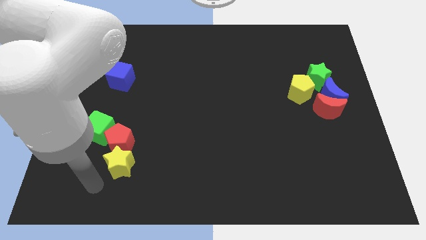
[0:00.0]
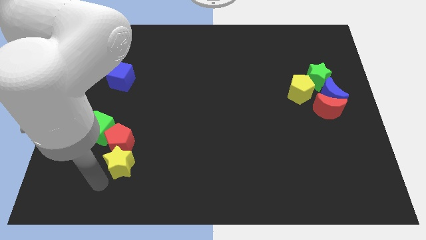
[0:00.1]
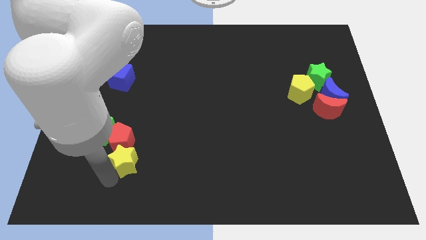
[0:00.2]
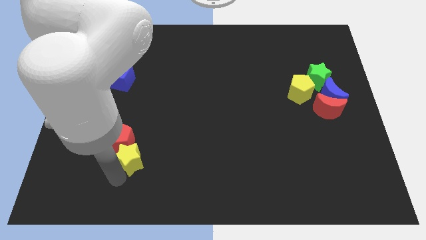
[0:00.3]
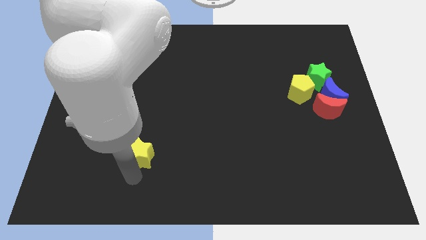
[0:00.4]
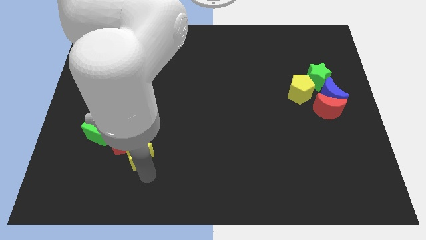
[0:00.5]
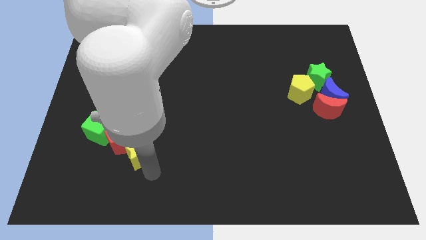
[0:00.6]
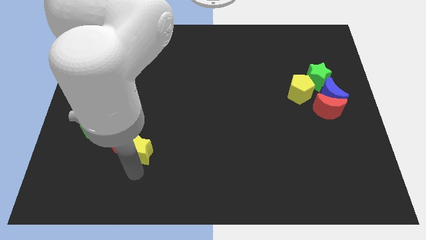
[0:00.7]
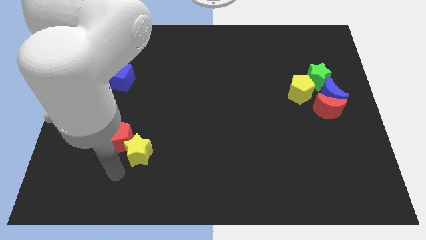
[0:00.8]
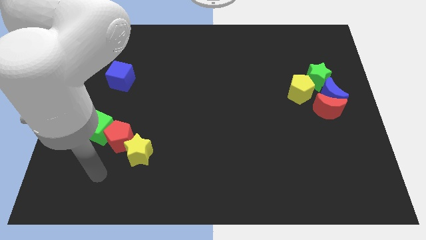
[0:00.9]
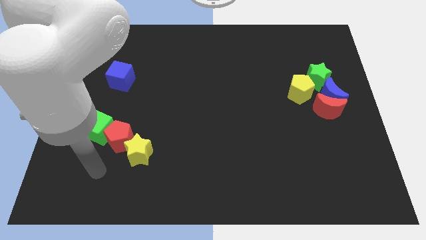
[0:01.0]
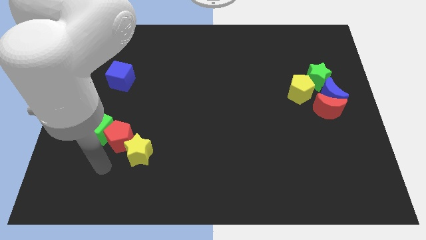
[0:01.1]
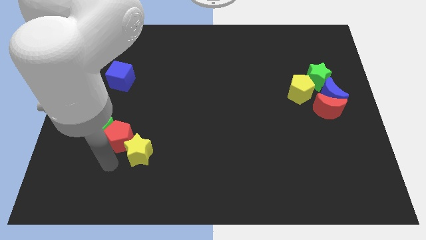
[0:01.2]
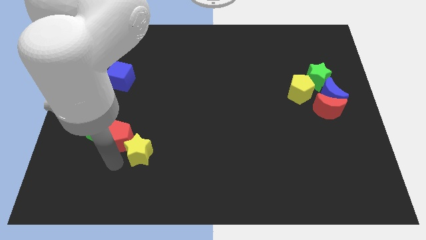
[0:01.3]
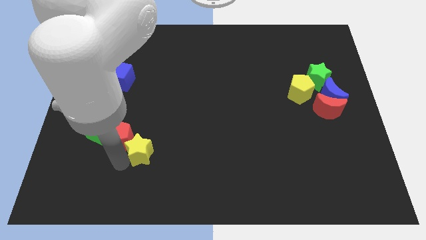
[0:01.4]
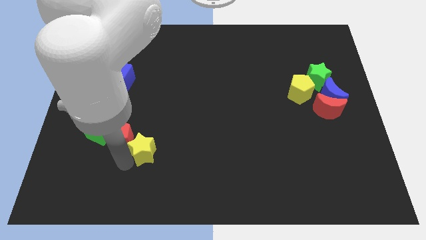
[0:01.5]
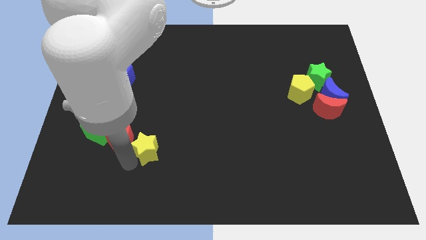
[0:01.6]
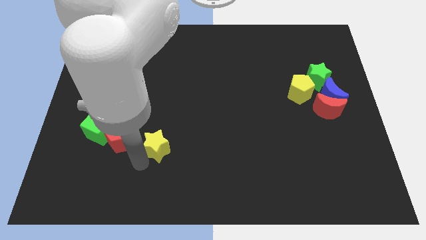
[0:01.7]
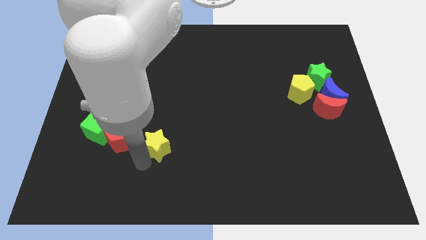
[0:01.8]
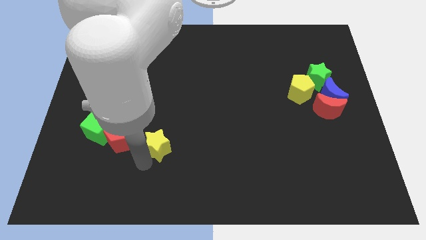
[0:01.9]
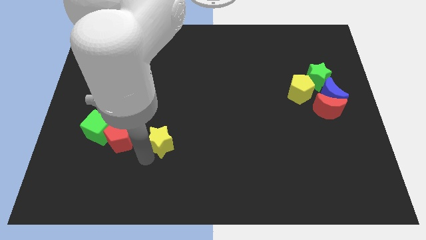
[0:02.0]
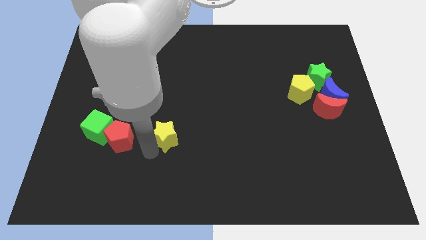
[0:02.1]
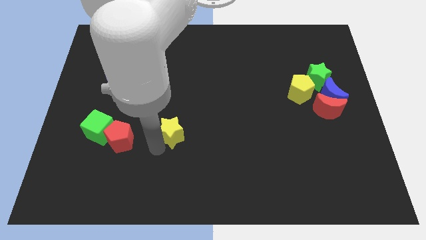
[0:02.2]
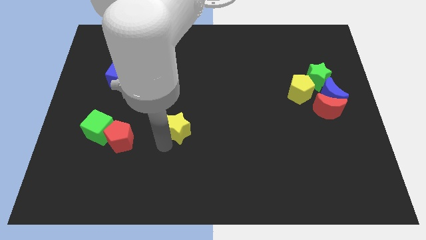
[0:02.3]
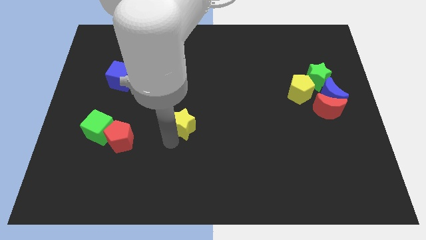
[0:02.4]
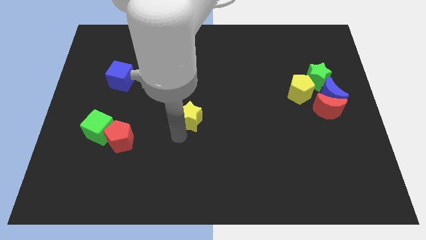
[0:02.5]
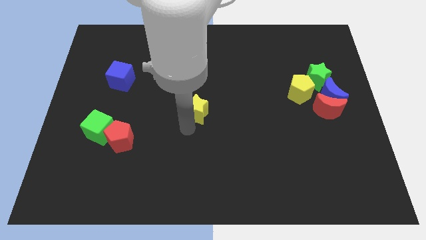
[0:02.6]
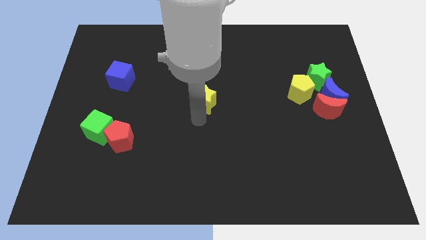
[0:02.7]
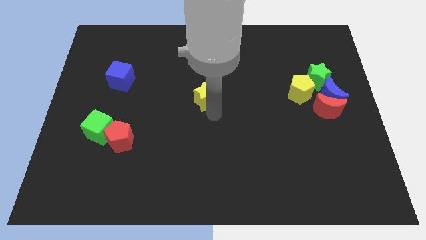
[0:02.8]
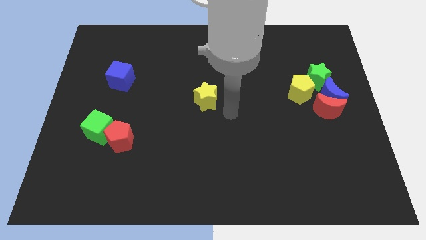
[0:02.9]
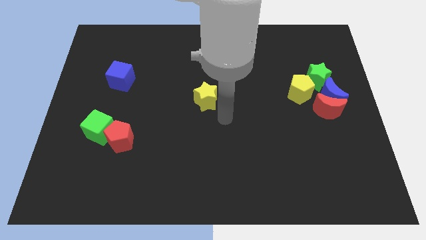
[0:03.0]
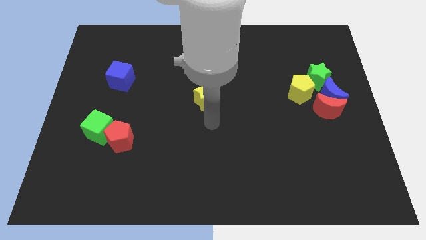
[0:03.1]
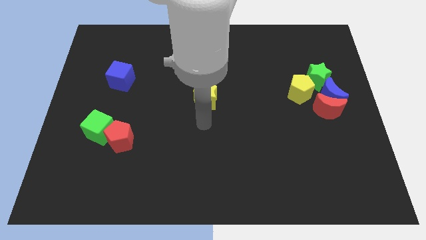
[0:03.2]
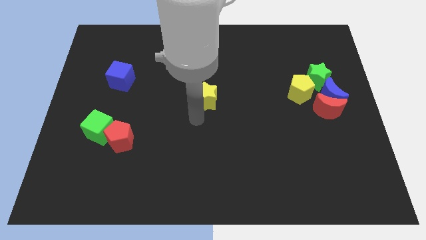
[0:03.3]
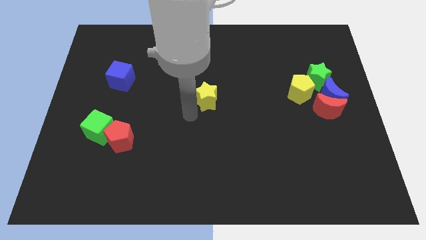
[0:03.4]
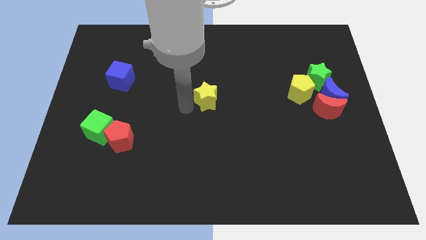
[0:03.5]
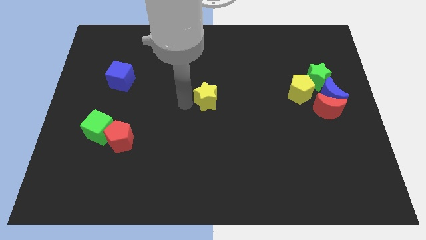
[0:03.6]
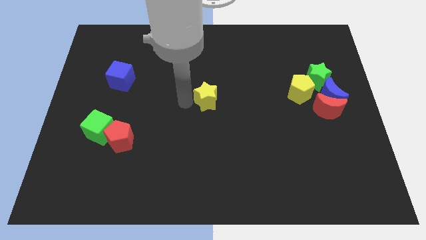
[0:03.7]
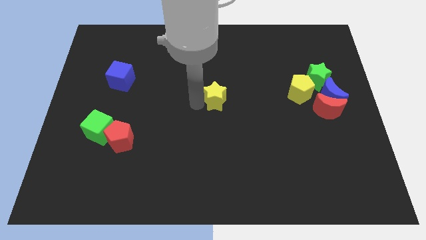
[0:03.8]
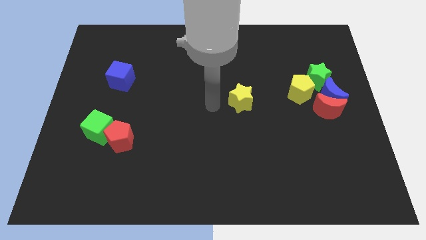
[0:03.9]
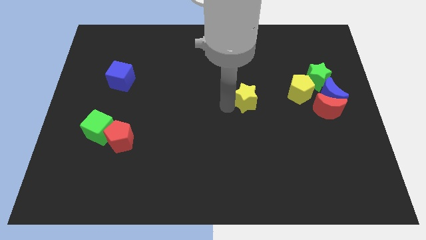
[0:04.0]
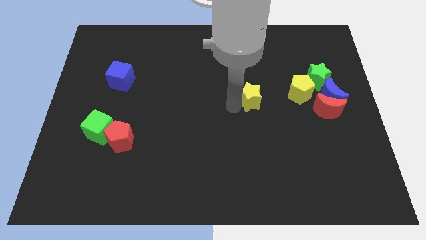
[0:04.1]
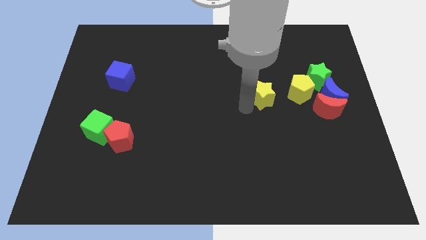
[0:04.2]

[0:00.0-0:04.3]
move the yellow star towards the group of blocks

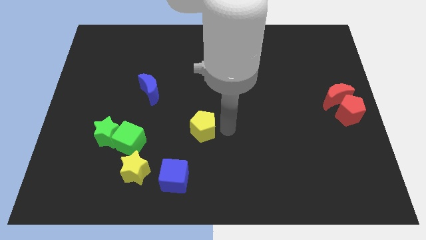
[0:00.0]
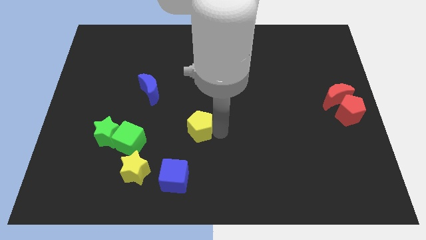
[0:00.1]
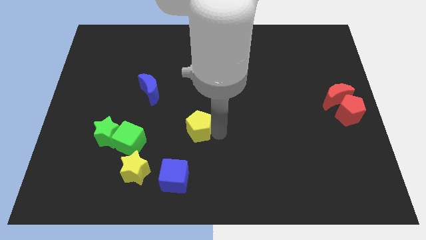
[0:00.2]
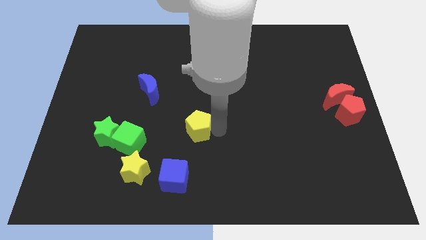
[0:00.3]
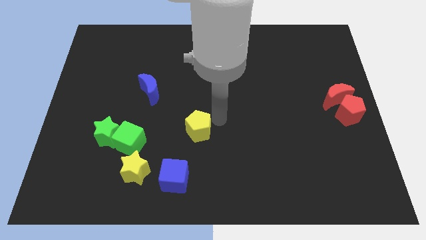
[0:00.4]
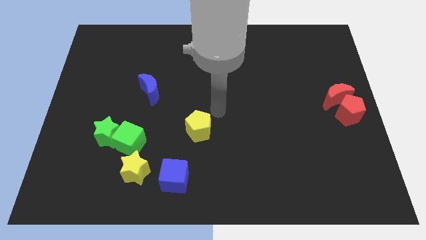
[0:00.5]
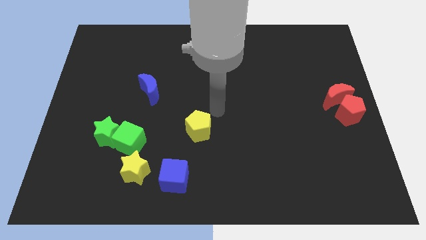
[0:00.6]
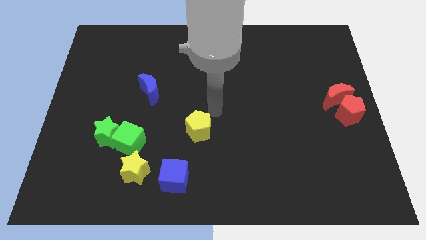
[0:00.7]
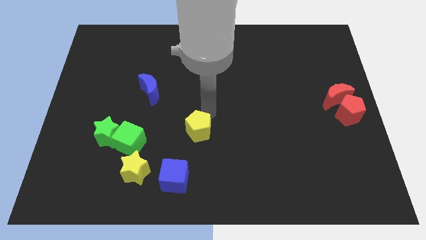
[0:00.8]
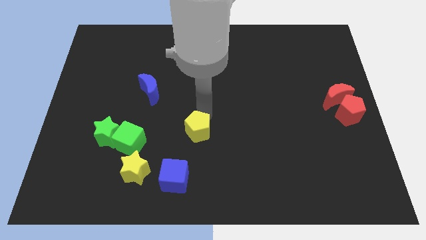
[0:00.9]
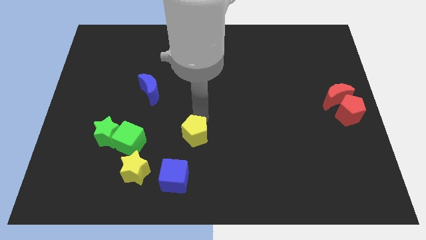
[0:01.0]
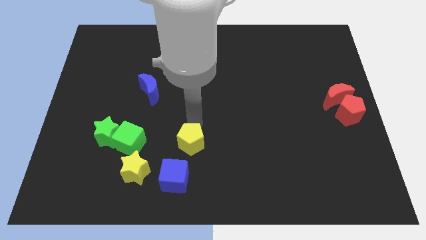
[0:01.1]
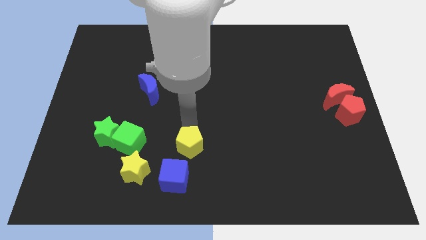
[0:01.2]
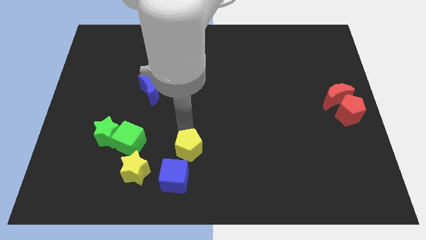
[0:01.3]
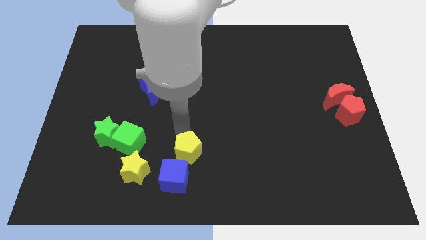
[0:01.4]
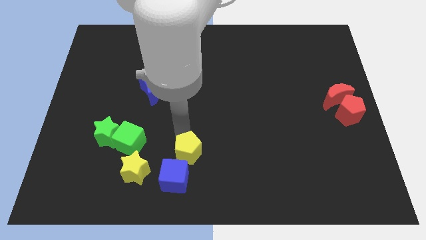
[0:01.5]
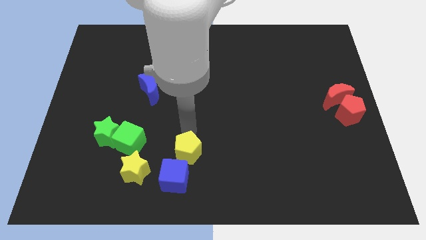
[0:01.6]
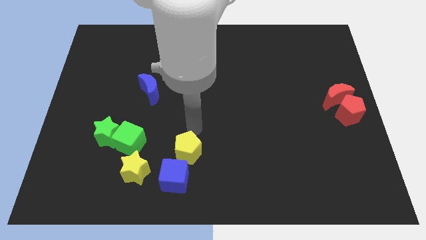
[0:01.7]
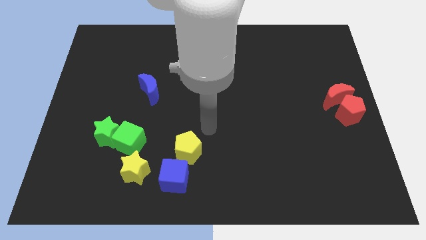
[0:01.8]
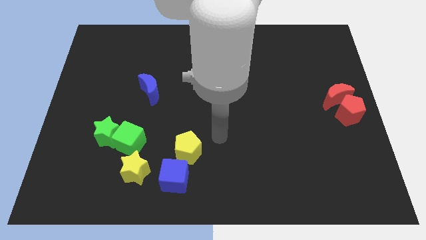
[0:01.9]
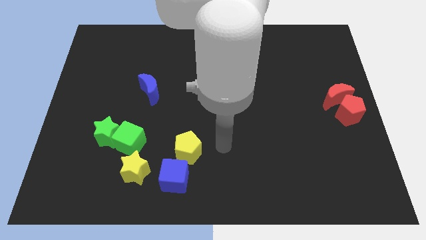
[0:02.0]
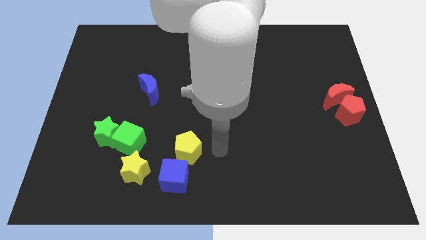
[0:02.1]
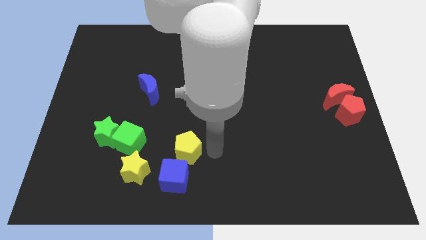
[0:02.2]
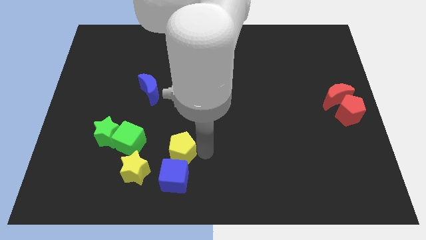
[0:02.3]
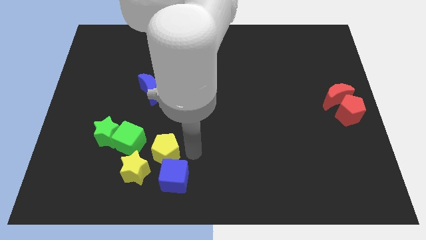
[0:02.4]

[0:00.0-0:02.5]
move the yellow pentagon above the yellow star

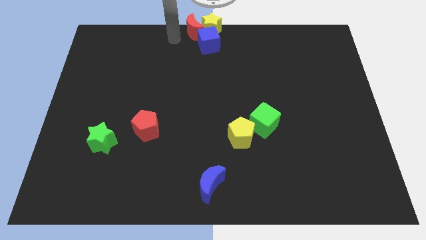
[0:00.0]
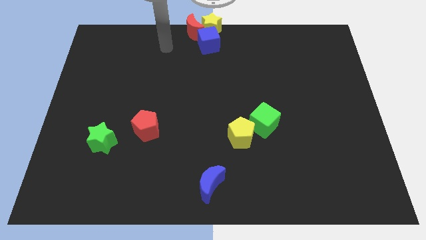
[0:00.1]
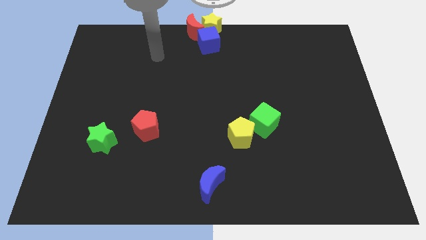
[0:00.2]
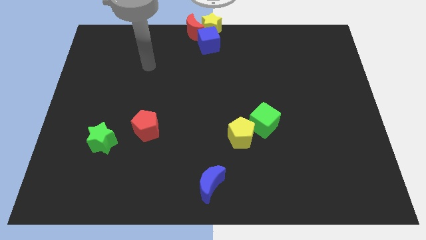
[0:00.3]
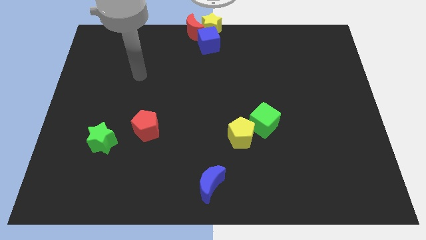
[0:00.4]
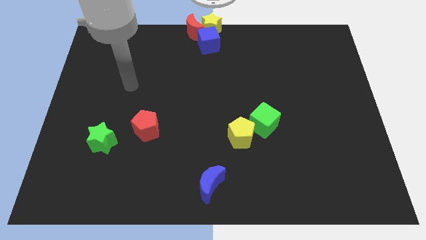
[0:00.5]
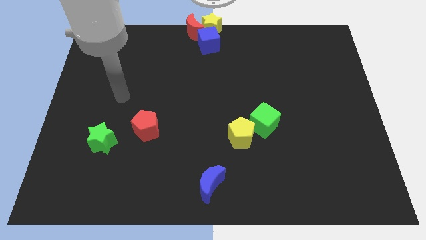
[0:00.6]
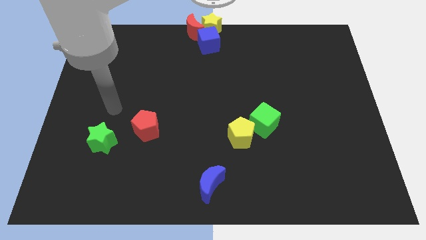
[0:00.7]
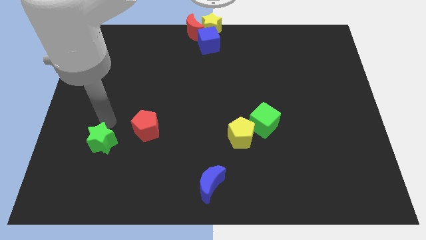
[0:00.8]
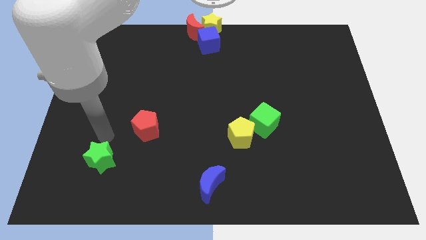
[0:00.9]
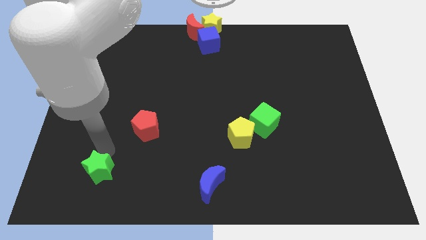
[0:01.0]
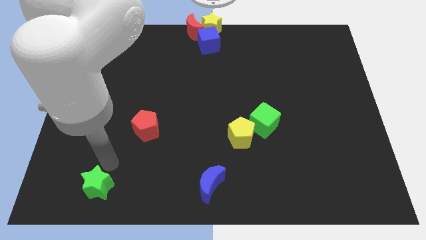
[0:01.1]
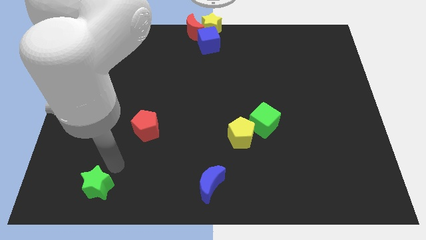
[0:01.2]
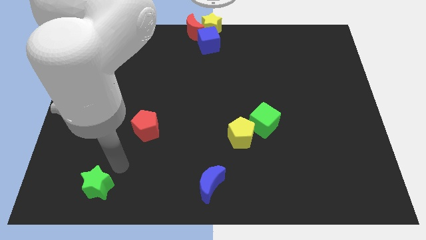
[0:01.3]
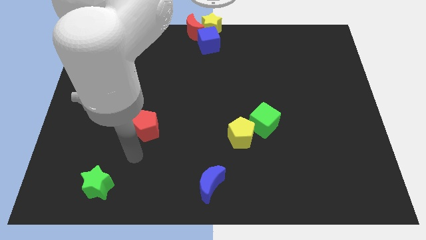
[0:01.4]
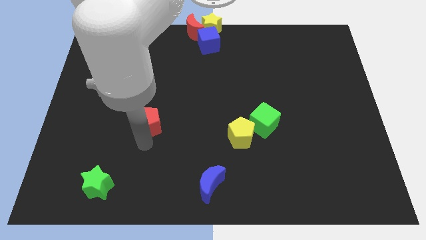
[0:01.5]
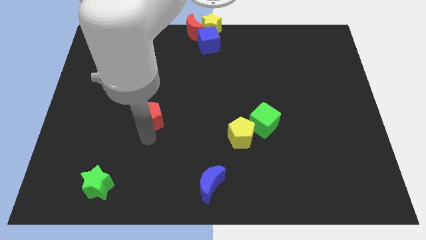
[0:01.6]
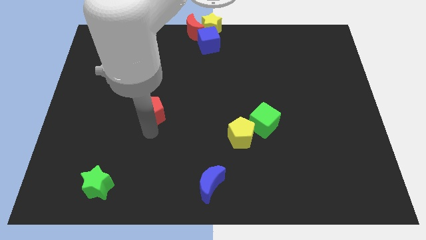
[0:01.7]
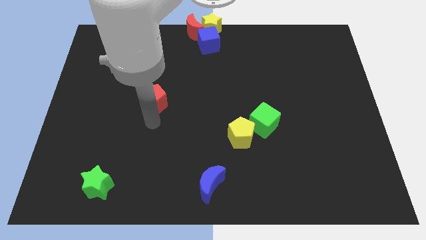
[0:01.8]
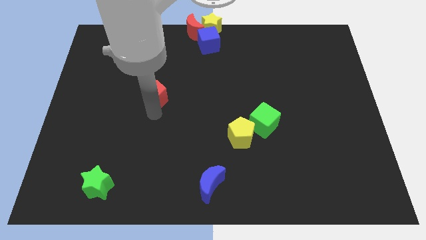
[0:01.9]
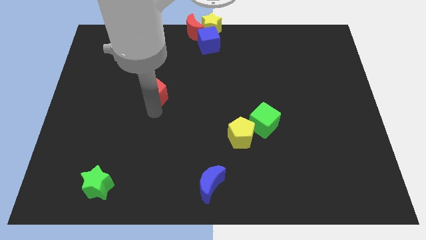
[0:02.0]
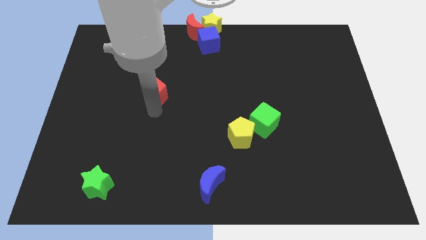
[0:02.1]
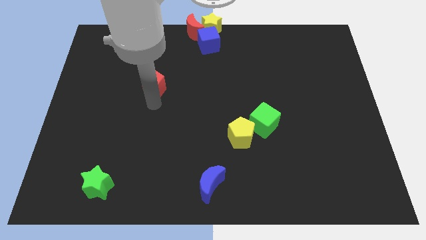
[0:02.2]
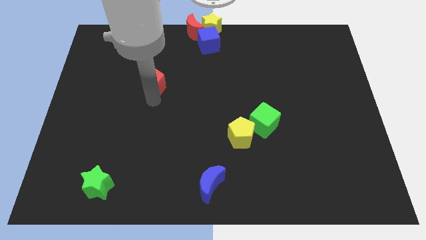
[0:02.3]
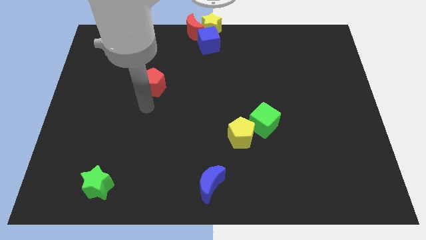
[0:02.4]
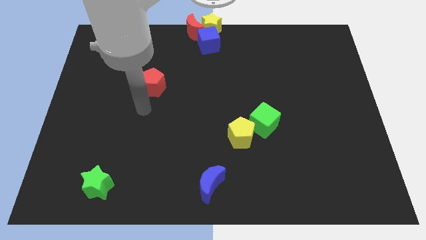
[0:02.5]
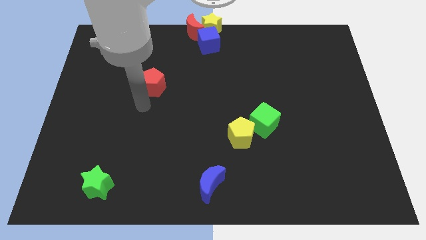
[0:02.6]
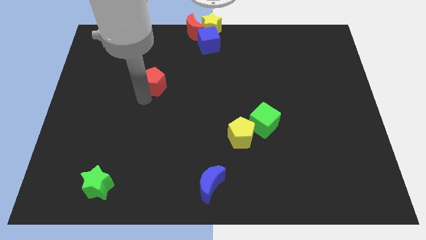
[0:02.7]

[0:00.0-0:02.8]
place the red pentagon diagonal to the blue cube
